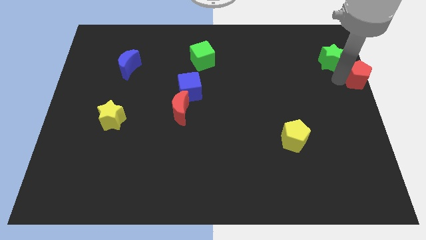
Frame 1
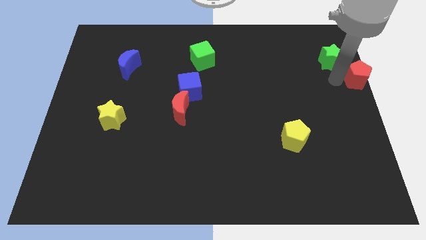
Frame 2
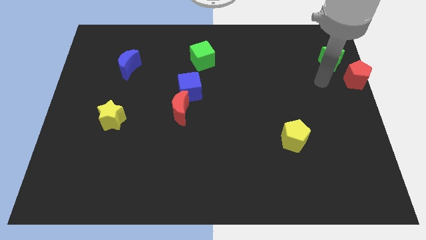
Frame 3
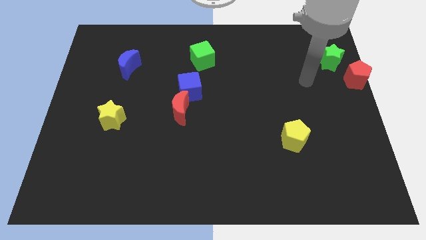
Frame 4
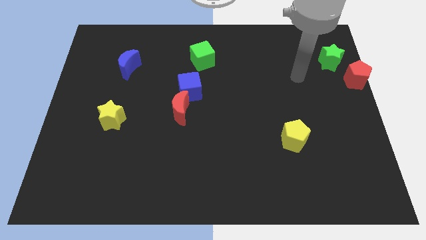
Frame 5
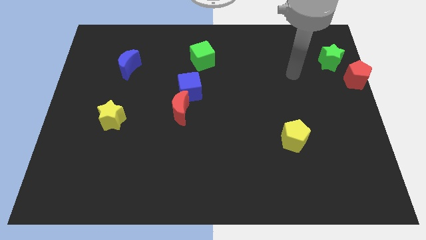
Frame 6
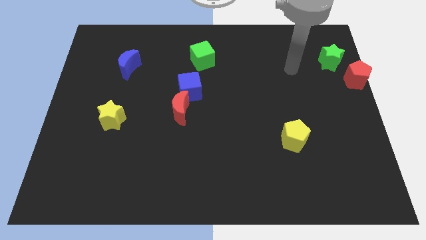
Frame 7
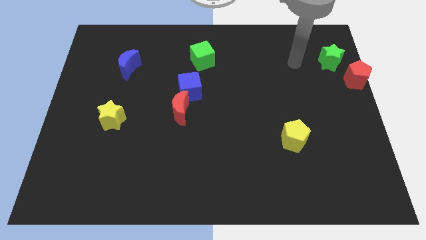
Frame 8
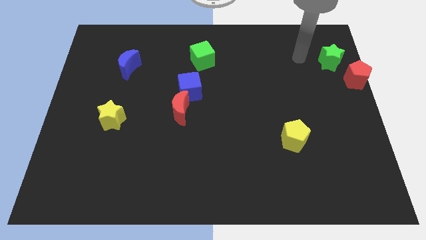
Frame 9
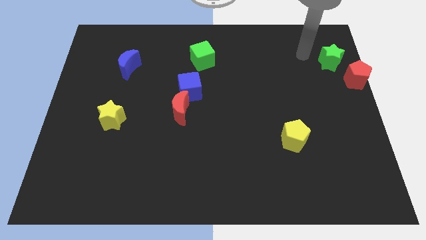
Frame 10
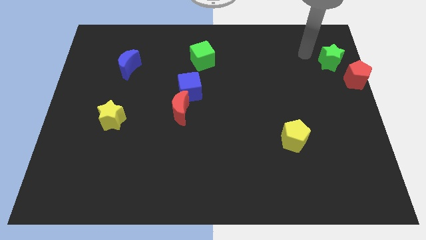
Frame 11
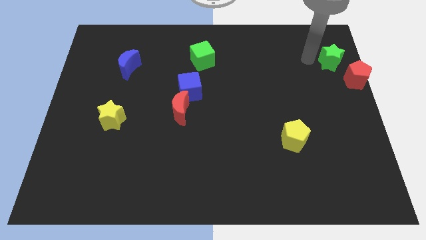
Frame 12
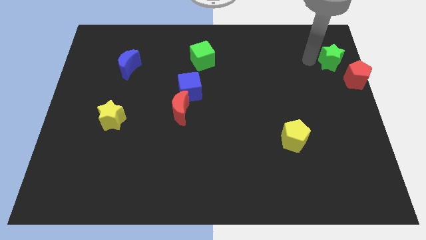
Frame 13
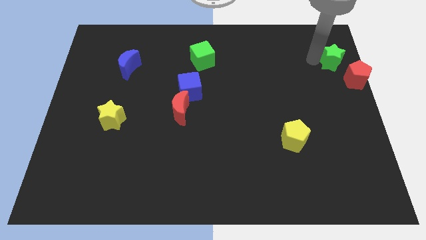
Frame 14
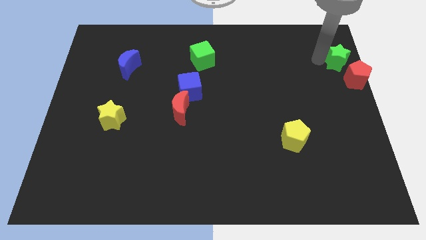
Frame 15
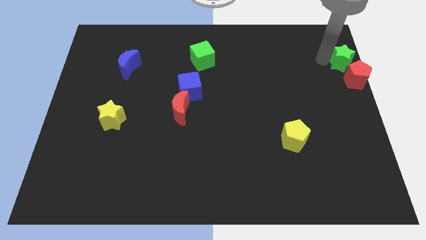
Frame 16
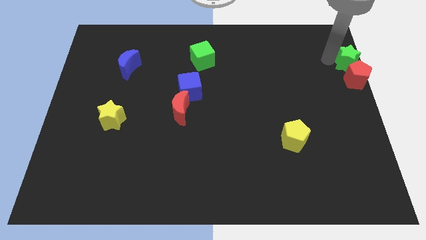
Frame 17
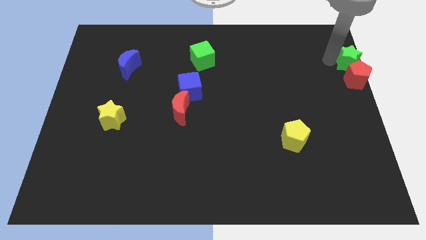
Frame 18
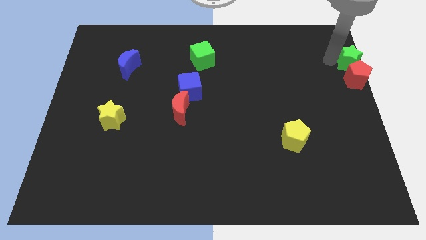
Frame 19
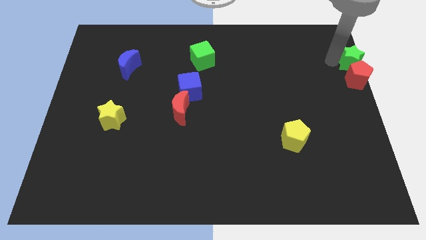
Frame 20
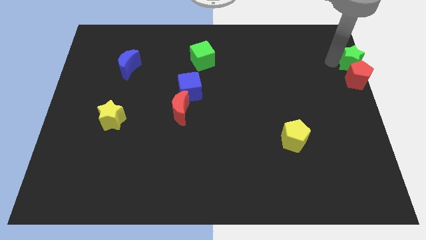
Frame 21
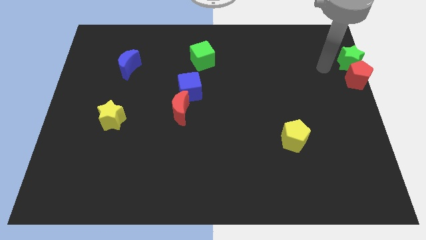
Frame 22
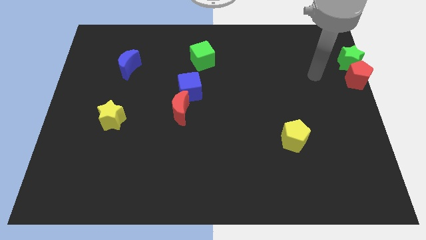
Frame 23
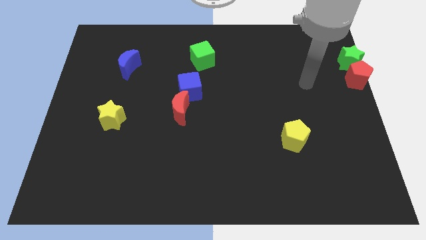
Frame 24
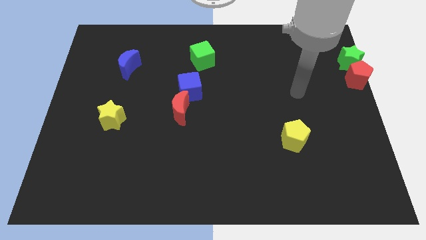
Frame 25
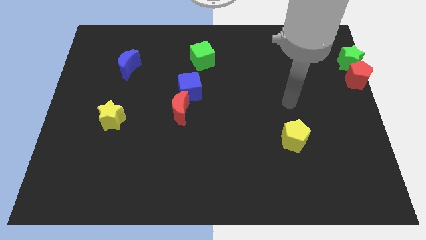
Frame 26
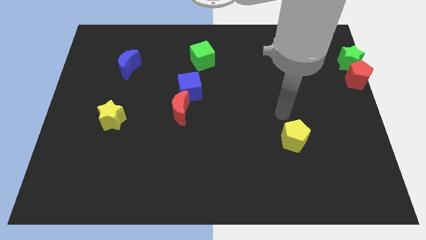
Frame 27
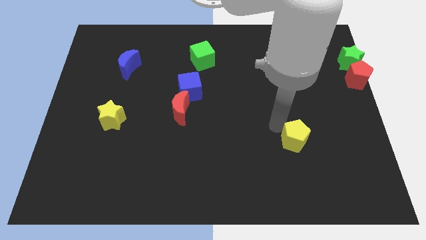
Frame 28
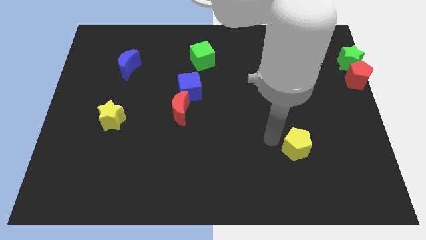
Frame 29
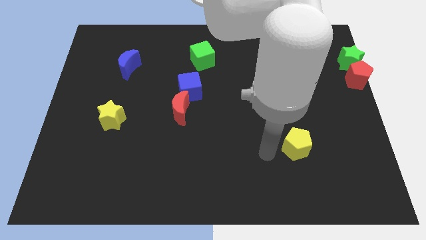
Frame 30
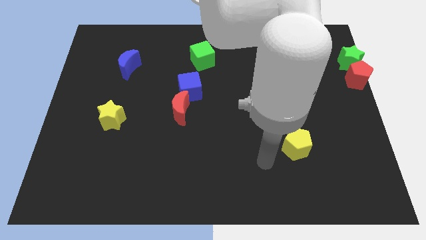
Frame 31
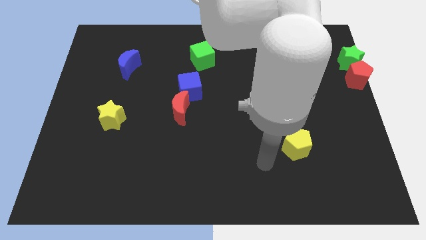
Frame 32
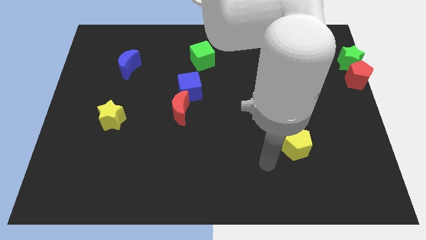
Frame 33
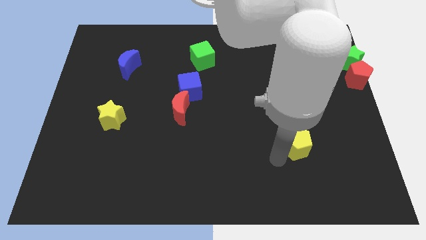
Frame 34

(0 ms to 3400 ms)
put the green star at the top of the red pentagon

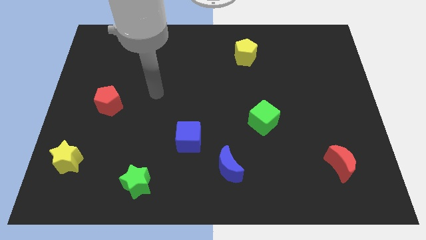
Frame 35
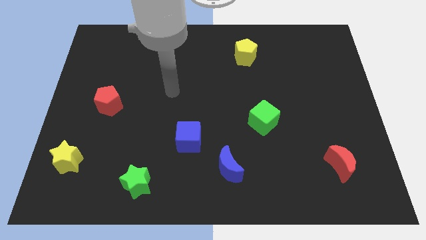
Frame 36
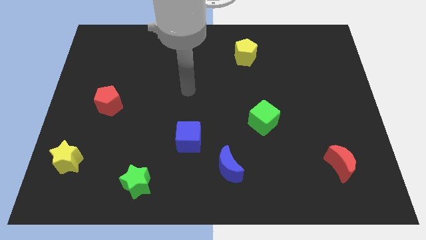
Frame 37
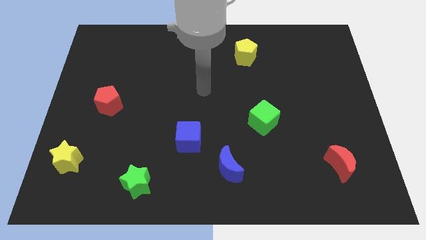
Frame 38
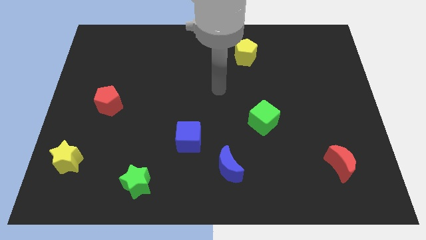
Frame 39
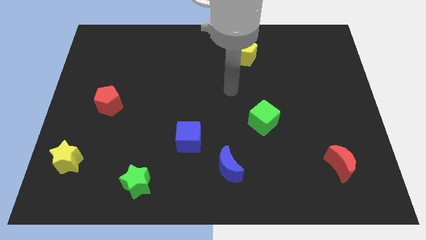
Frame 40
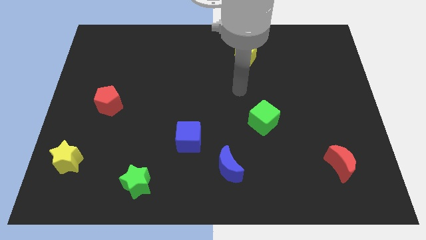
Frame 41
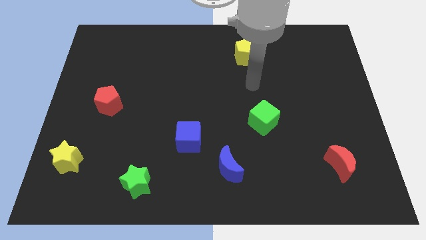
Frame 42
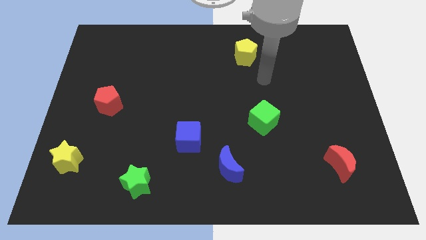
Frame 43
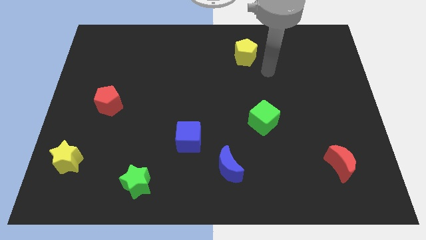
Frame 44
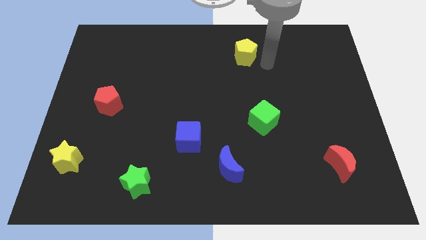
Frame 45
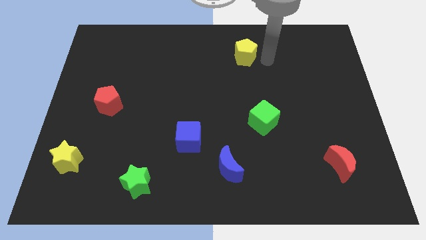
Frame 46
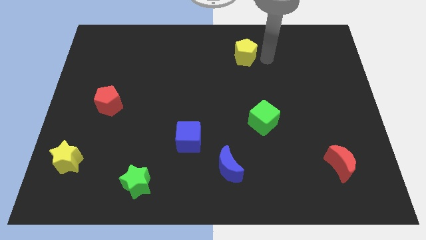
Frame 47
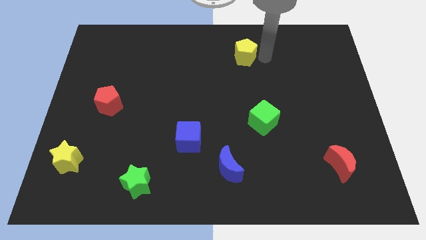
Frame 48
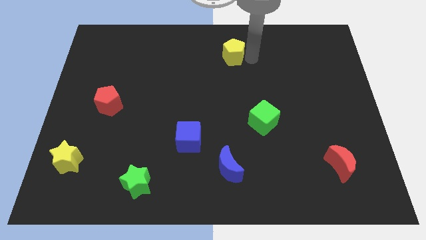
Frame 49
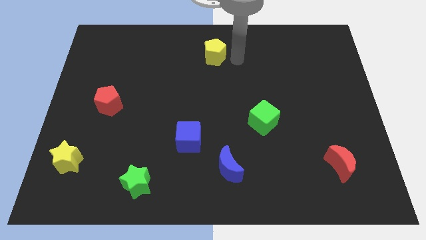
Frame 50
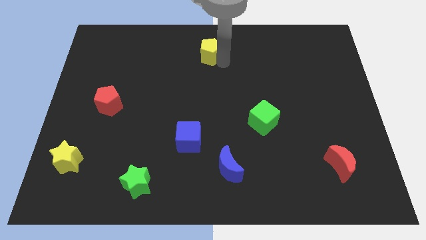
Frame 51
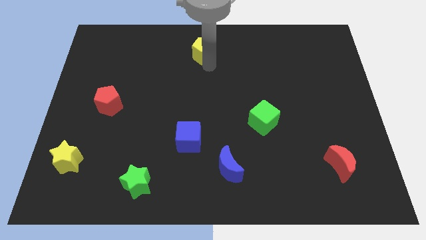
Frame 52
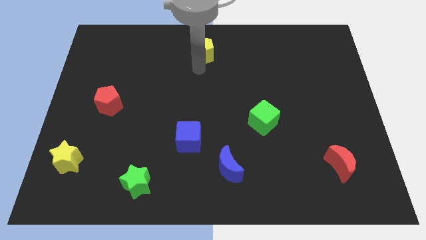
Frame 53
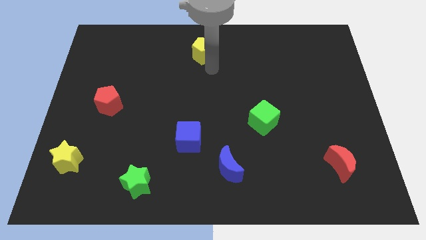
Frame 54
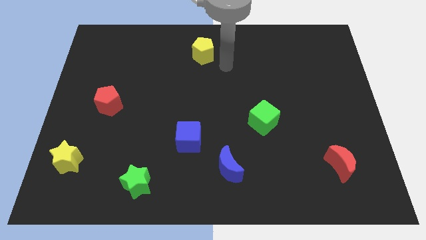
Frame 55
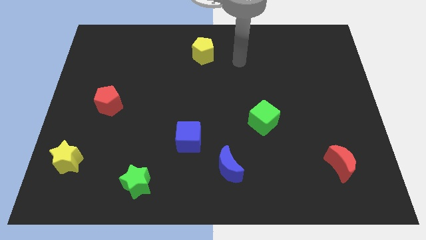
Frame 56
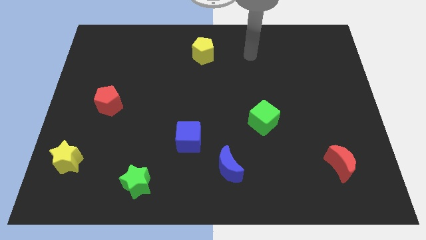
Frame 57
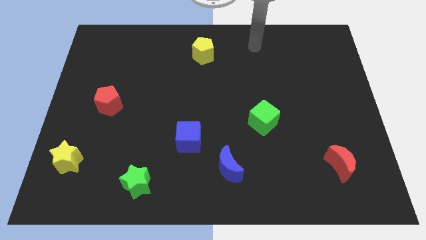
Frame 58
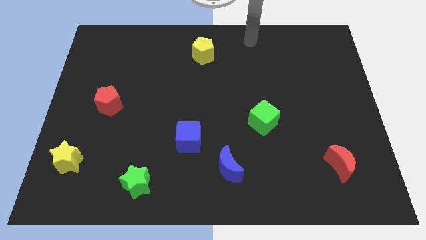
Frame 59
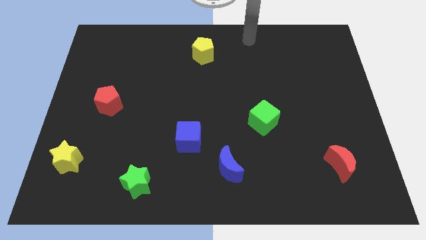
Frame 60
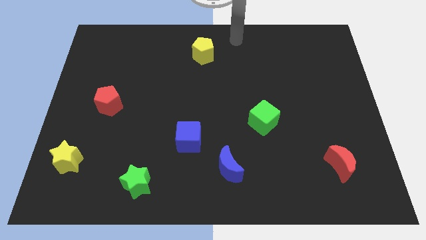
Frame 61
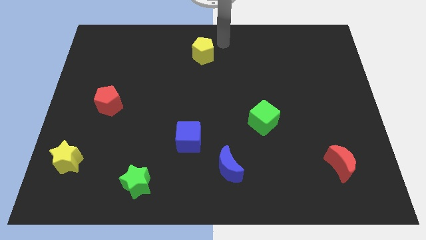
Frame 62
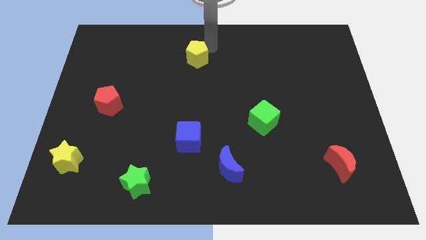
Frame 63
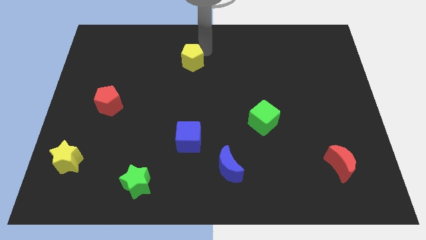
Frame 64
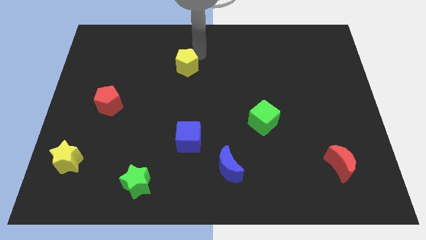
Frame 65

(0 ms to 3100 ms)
move the yellow pentagon to the top right of red pentagon

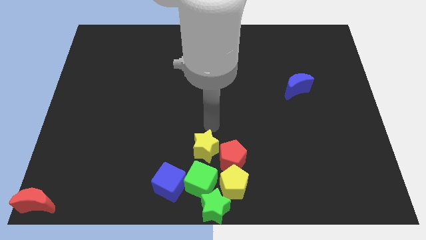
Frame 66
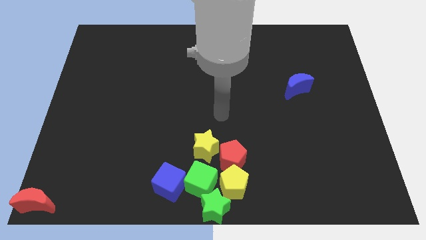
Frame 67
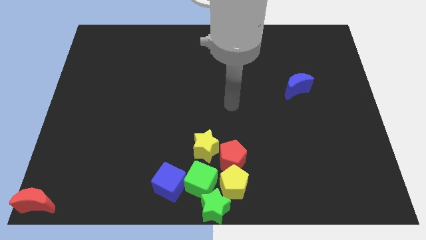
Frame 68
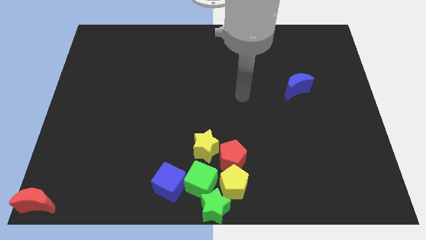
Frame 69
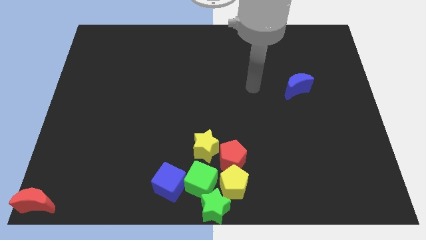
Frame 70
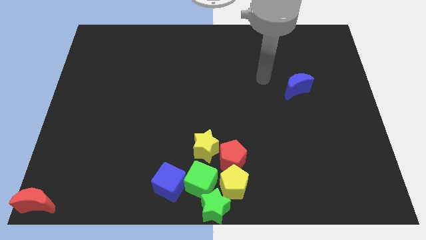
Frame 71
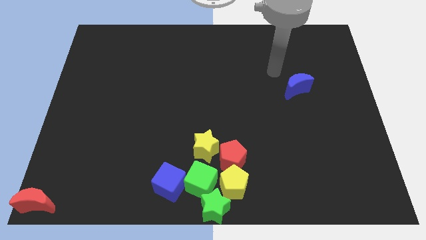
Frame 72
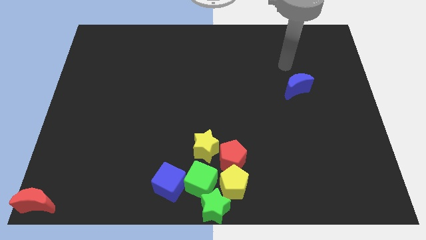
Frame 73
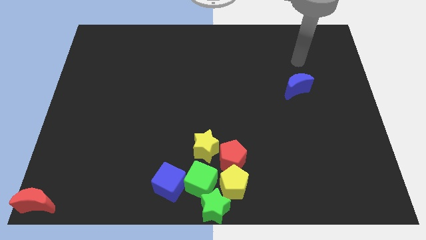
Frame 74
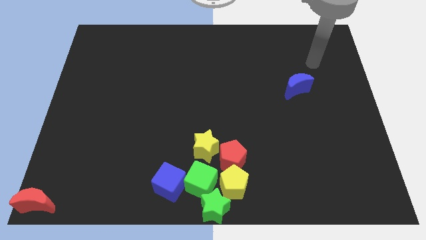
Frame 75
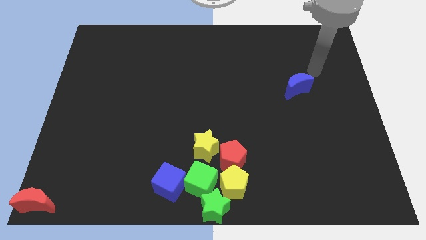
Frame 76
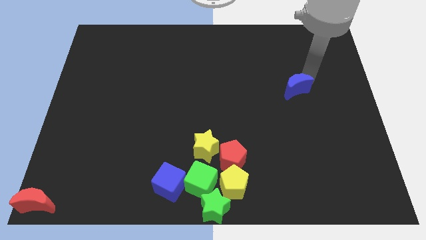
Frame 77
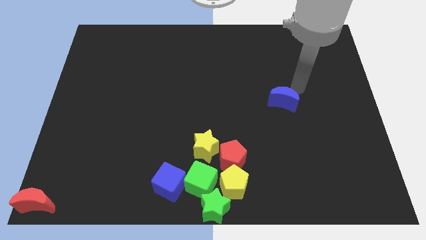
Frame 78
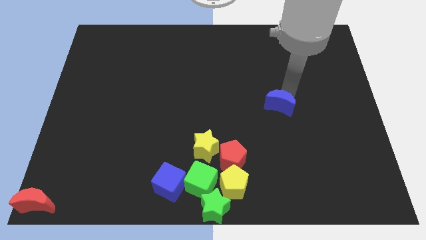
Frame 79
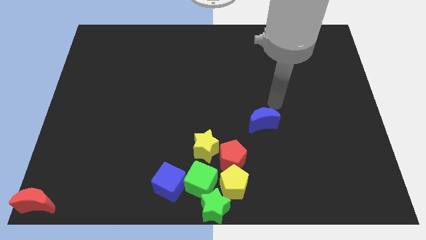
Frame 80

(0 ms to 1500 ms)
move the arm to the blue moon

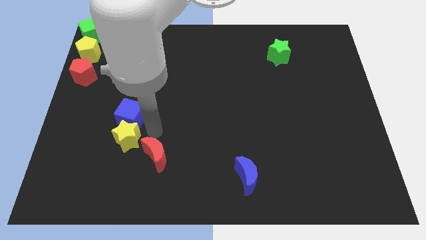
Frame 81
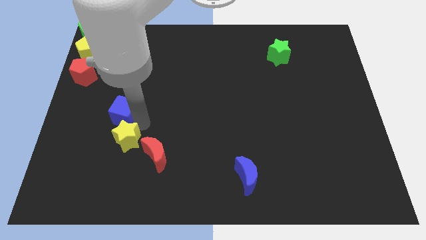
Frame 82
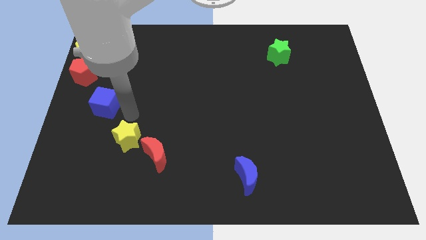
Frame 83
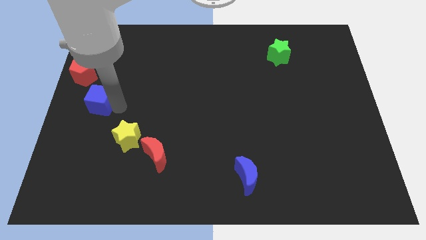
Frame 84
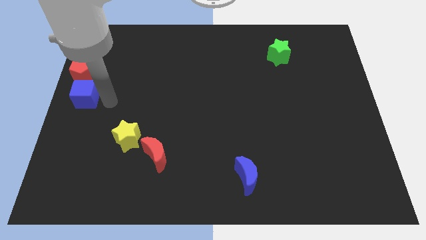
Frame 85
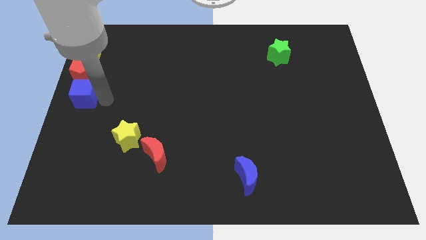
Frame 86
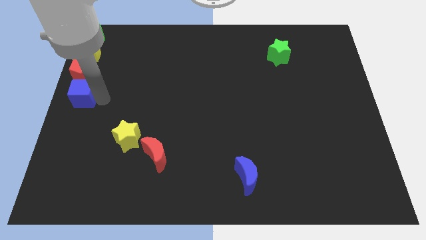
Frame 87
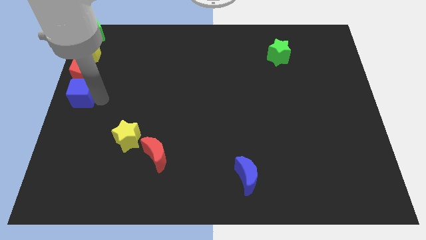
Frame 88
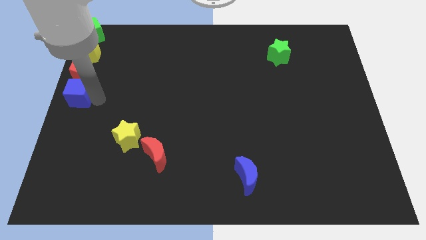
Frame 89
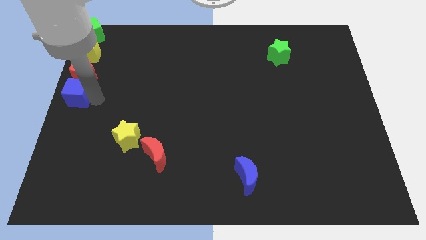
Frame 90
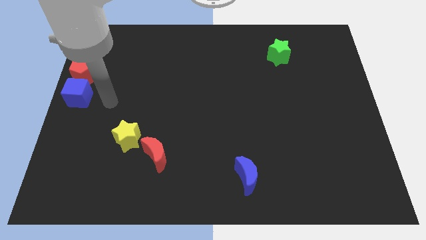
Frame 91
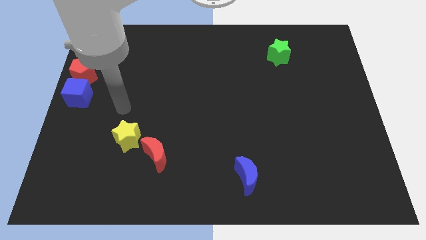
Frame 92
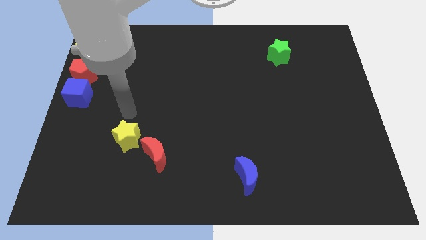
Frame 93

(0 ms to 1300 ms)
place the blue cube below the red pentagon
